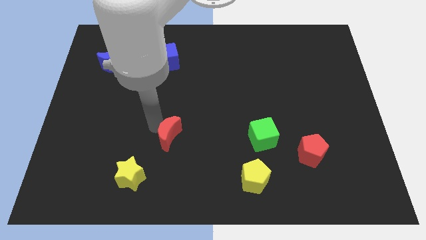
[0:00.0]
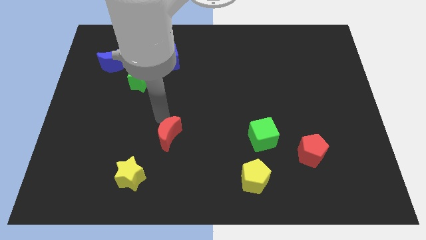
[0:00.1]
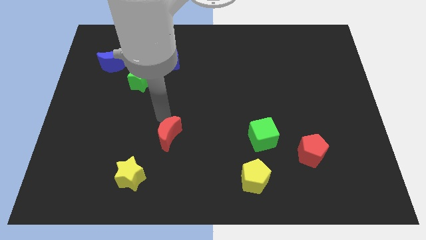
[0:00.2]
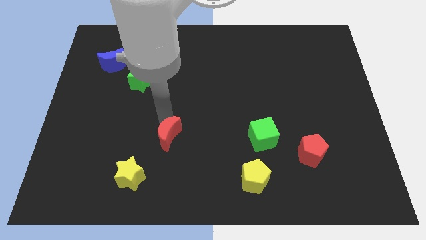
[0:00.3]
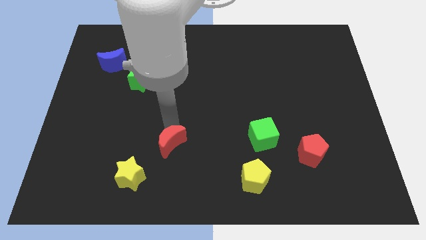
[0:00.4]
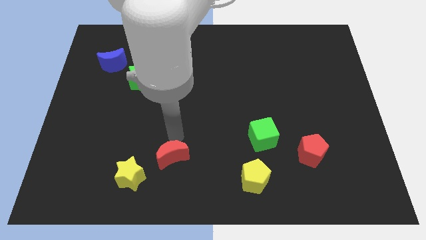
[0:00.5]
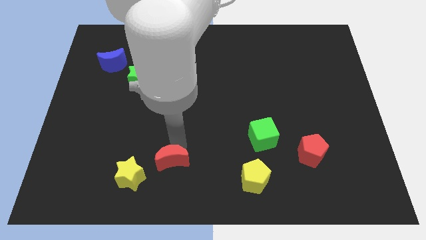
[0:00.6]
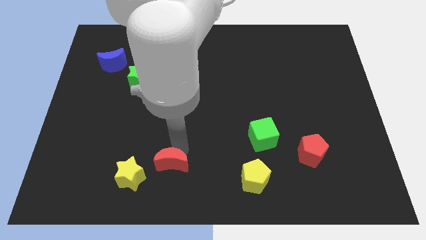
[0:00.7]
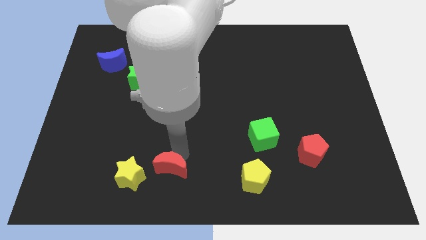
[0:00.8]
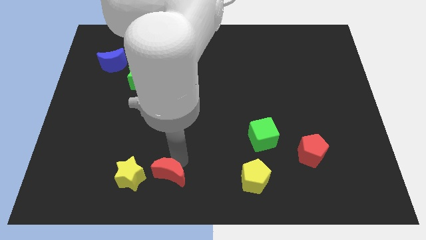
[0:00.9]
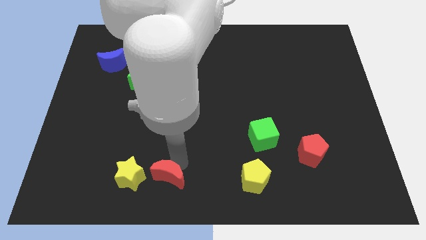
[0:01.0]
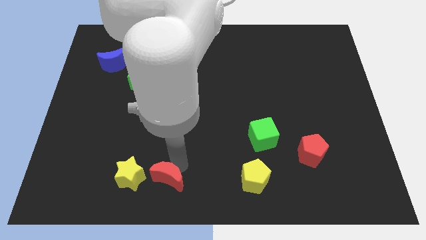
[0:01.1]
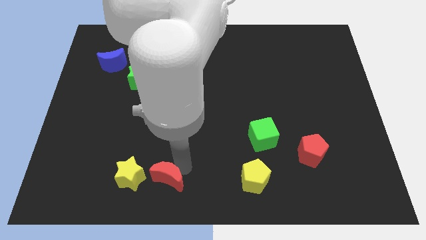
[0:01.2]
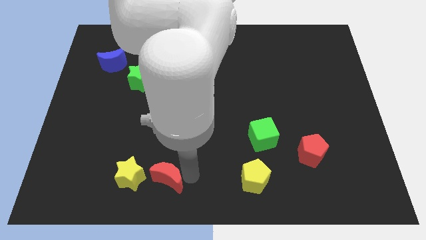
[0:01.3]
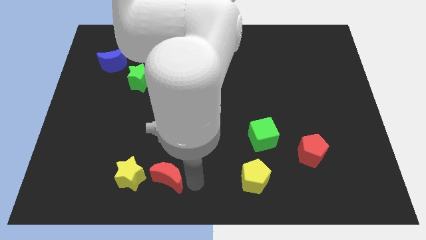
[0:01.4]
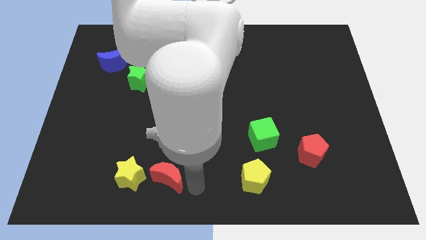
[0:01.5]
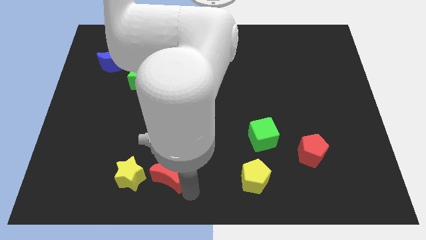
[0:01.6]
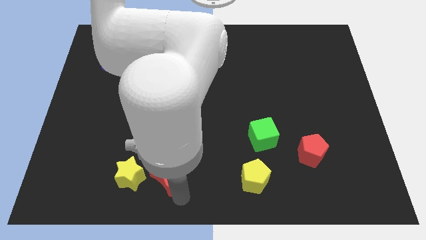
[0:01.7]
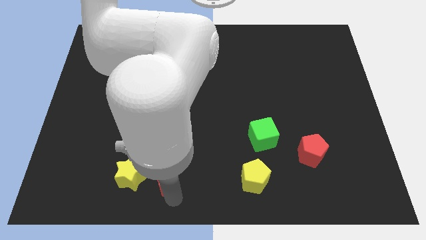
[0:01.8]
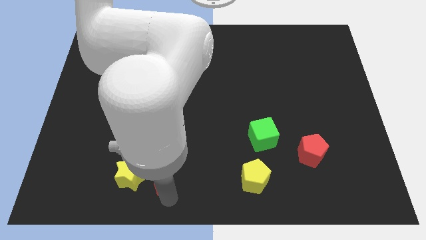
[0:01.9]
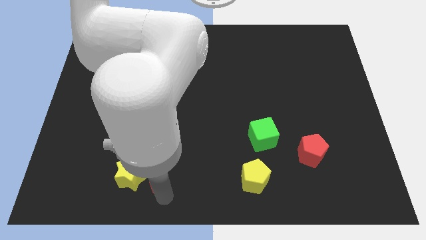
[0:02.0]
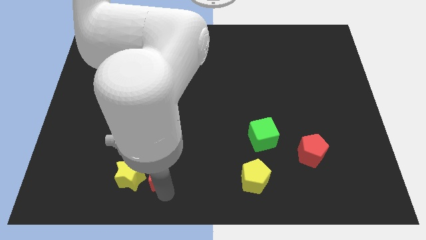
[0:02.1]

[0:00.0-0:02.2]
place the red moon to the right of the yellow star

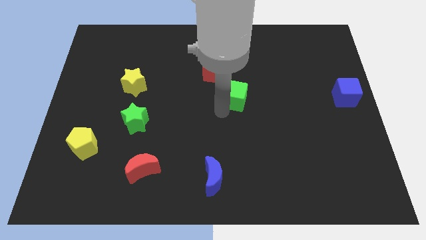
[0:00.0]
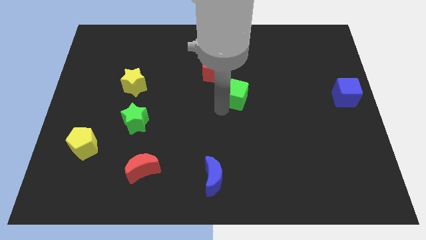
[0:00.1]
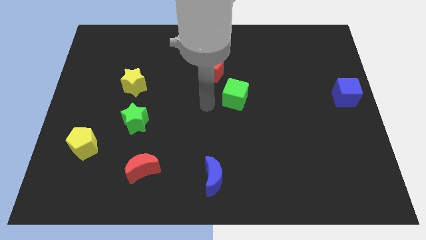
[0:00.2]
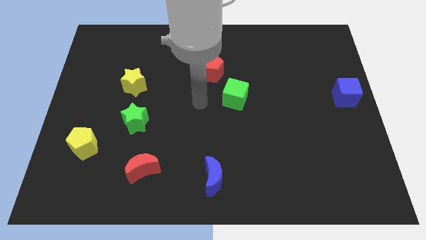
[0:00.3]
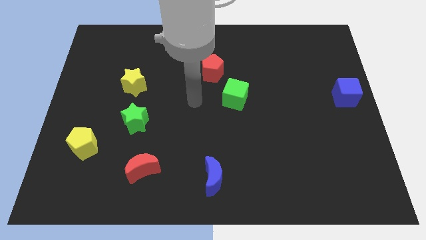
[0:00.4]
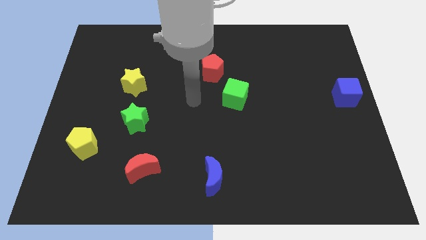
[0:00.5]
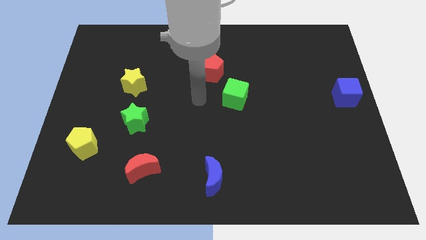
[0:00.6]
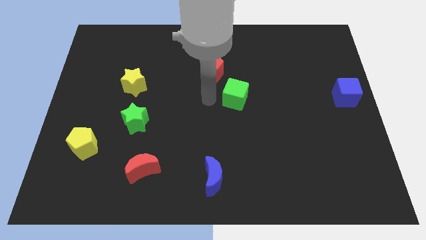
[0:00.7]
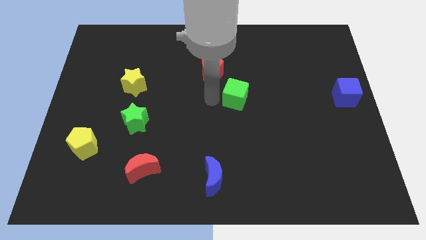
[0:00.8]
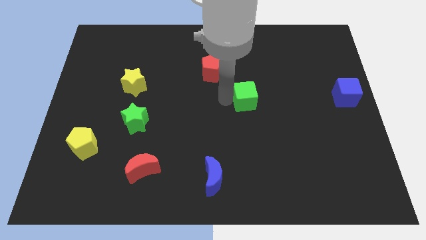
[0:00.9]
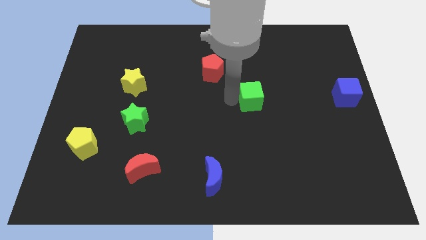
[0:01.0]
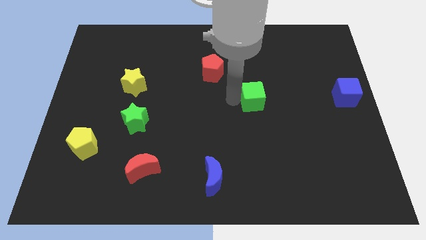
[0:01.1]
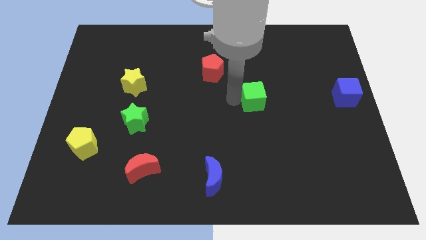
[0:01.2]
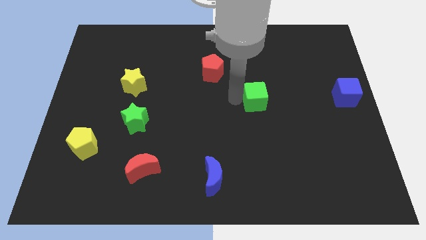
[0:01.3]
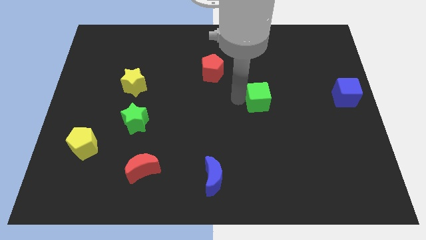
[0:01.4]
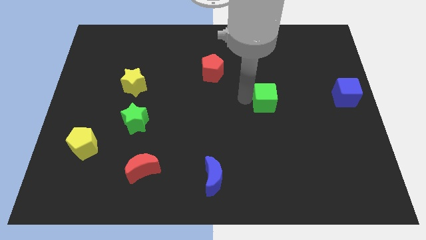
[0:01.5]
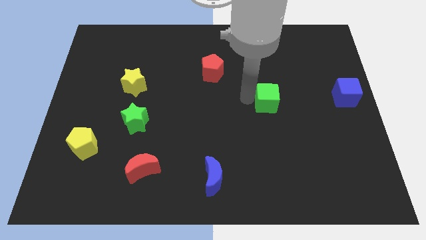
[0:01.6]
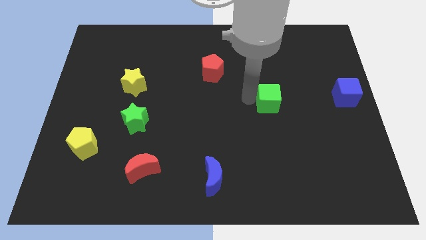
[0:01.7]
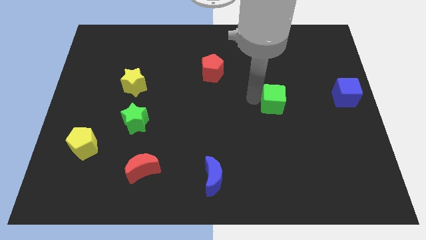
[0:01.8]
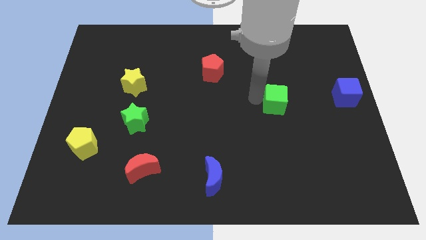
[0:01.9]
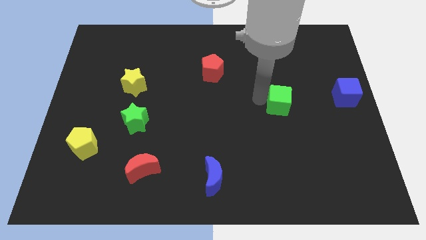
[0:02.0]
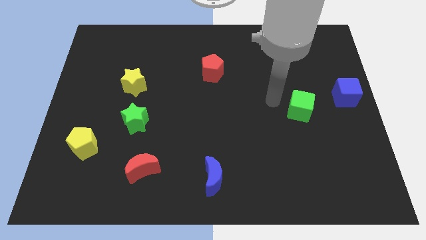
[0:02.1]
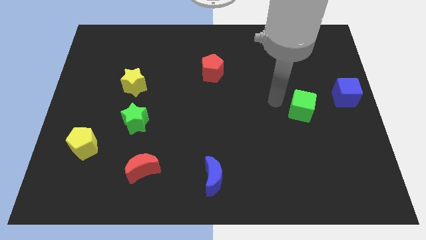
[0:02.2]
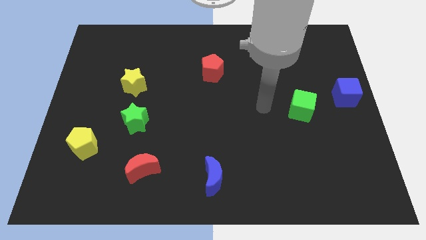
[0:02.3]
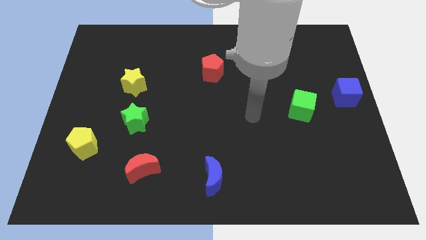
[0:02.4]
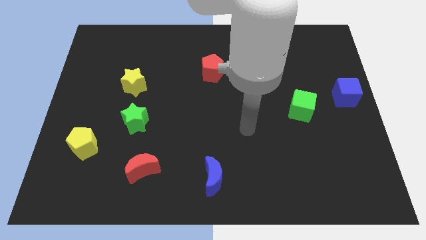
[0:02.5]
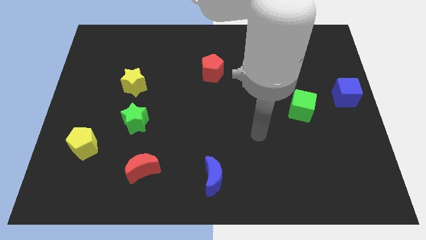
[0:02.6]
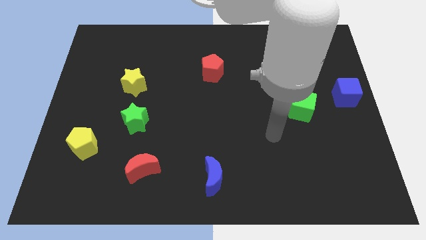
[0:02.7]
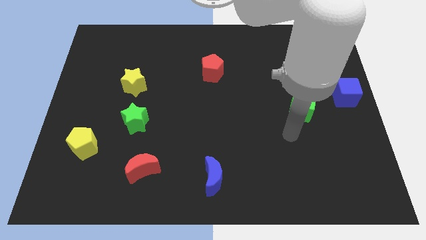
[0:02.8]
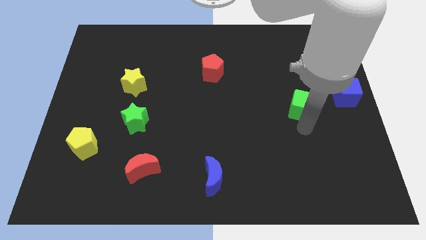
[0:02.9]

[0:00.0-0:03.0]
push the green cube towards the blue cube

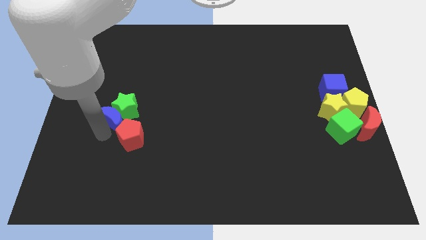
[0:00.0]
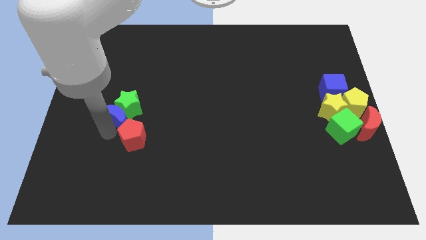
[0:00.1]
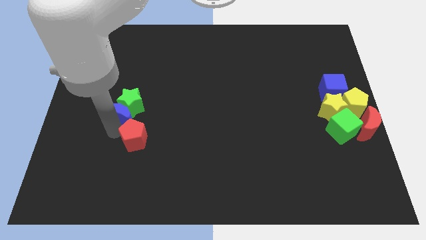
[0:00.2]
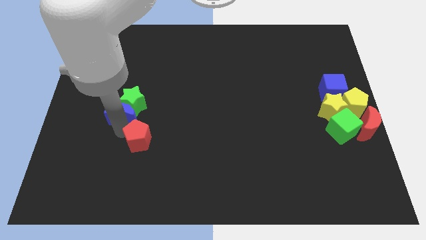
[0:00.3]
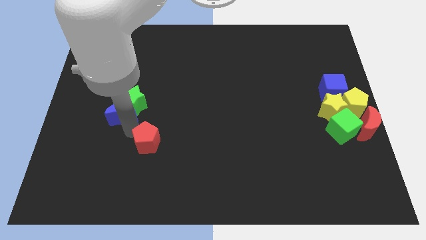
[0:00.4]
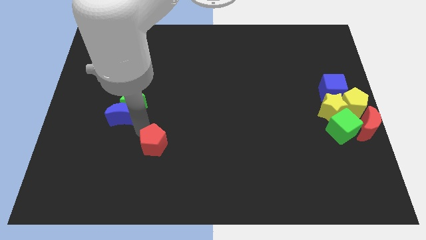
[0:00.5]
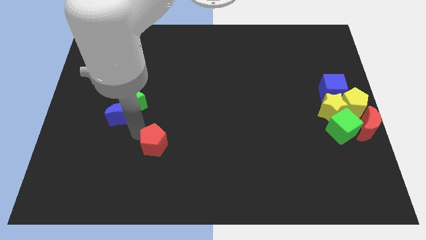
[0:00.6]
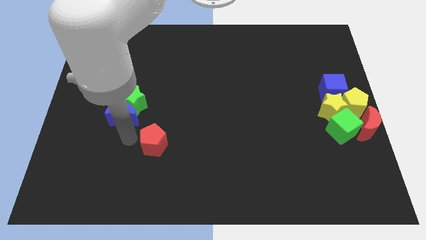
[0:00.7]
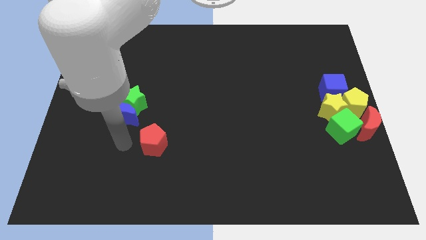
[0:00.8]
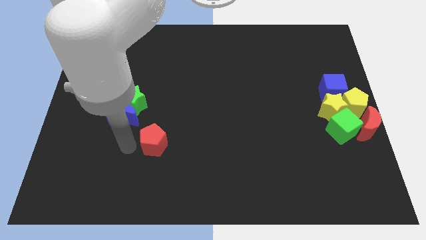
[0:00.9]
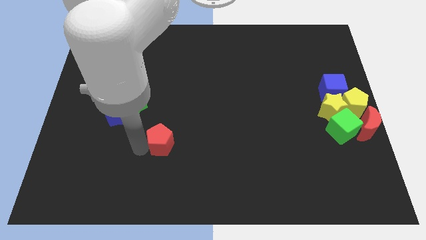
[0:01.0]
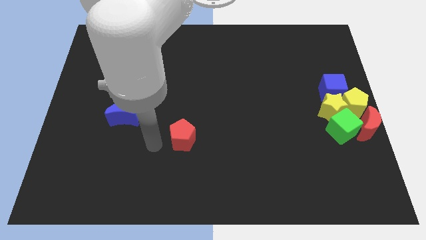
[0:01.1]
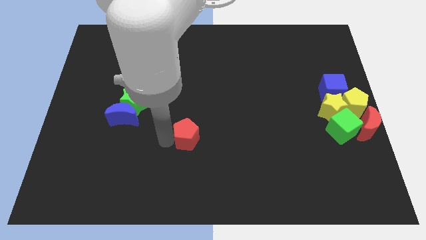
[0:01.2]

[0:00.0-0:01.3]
separate the red pentagon from the group of blocks

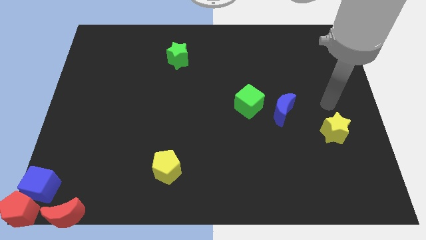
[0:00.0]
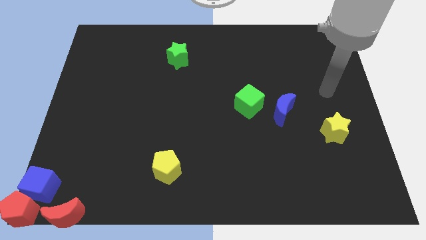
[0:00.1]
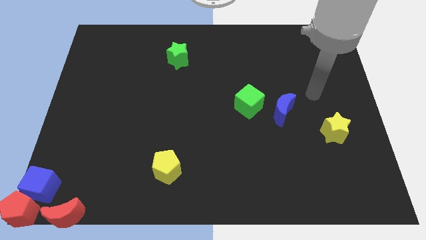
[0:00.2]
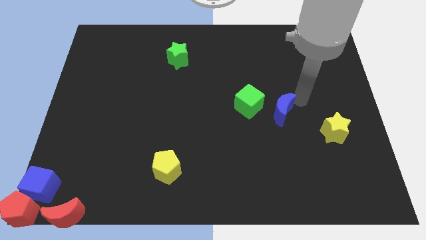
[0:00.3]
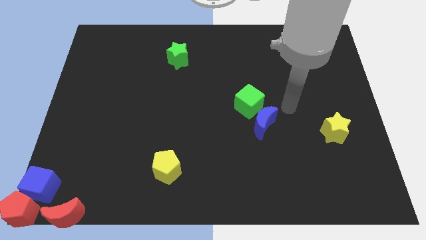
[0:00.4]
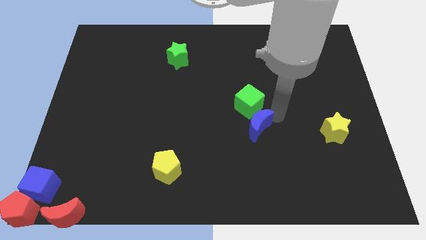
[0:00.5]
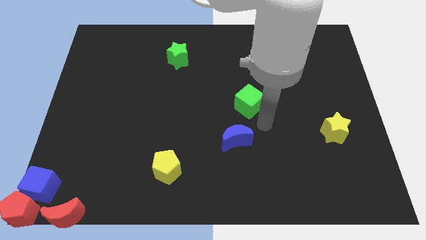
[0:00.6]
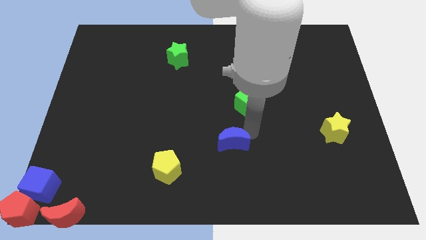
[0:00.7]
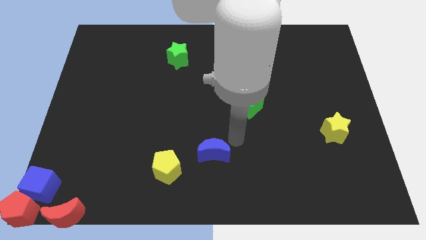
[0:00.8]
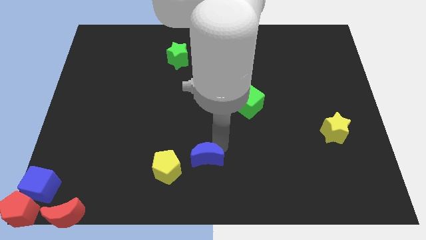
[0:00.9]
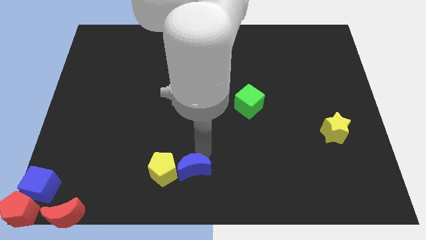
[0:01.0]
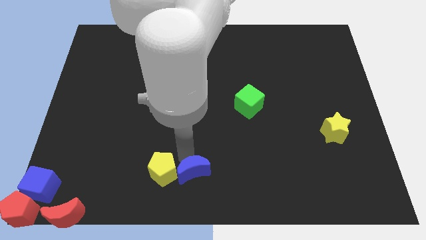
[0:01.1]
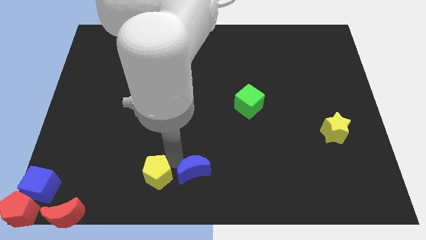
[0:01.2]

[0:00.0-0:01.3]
move blue crescent to the right of yellow pentagon

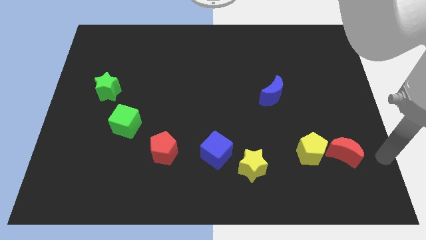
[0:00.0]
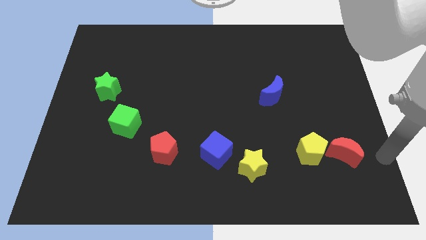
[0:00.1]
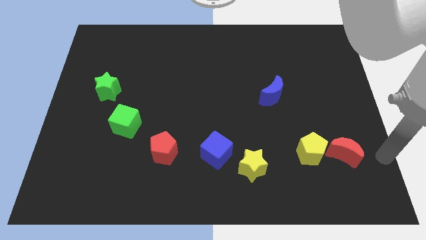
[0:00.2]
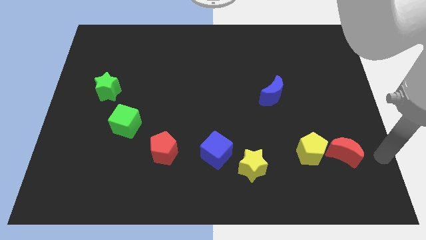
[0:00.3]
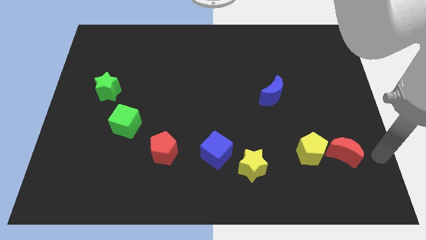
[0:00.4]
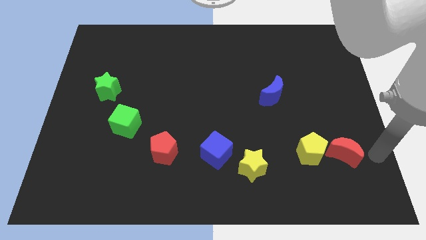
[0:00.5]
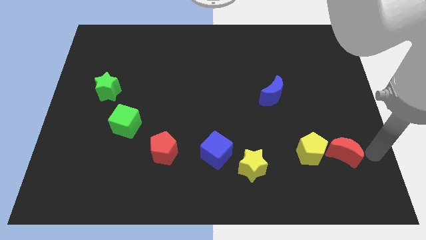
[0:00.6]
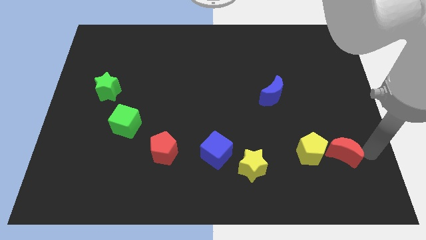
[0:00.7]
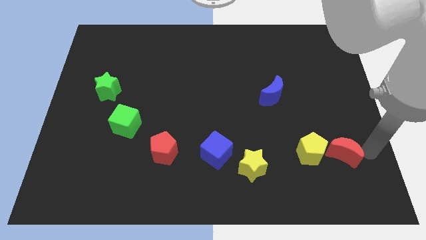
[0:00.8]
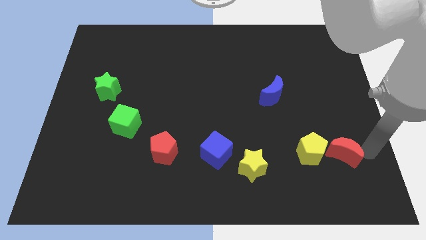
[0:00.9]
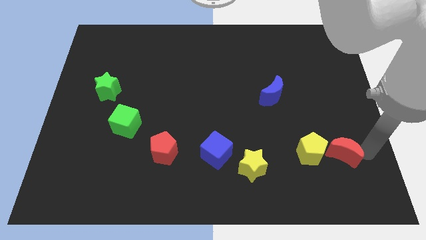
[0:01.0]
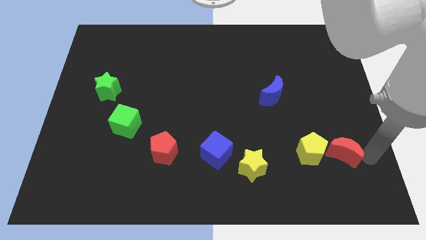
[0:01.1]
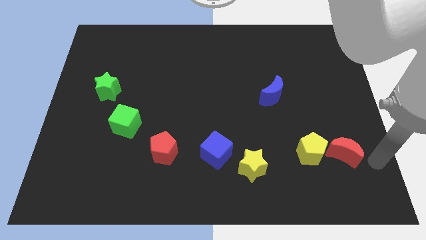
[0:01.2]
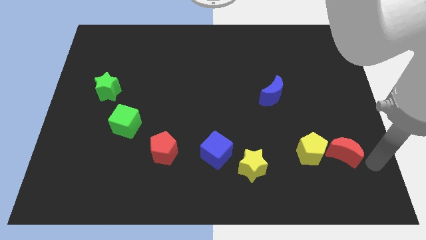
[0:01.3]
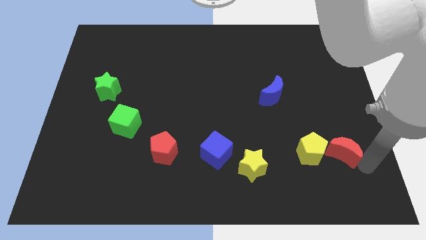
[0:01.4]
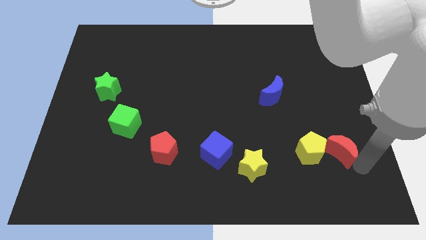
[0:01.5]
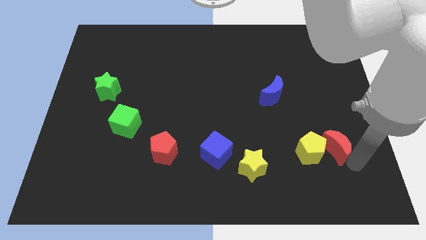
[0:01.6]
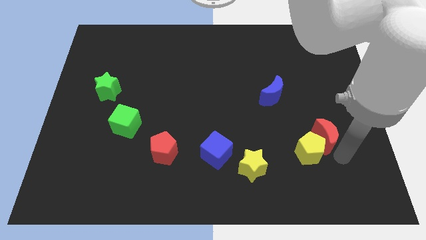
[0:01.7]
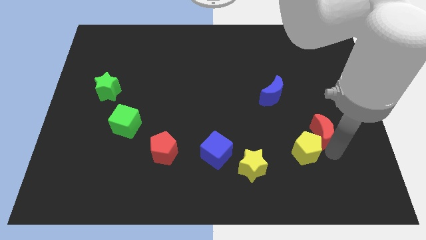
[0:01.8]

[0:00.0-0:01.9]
push the red moon into the yellow pentagon
